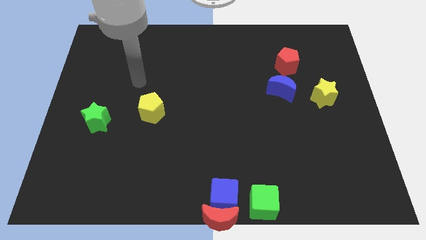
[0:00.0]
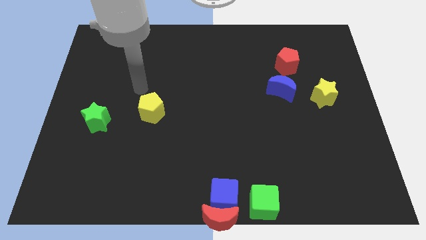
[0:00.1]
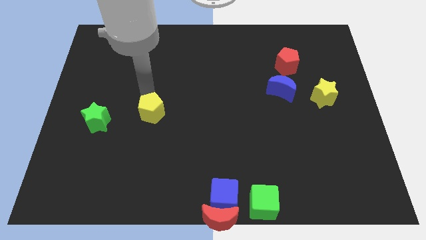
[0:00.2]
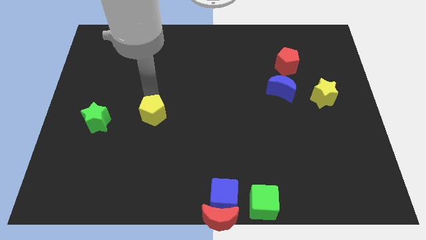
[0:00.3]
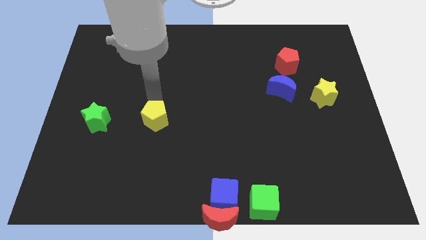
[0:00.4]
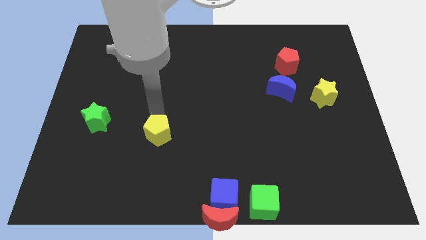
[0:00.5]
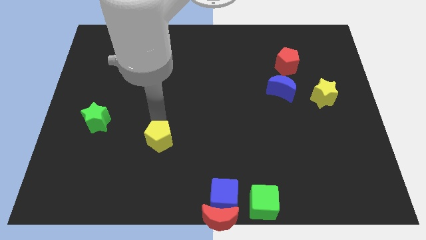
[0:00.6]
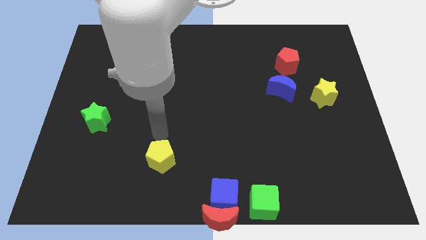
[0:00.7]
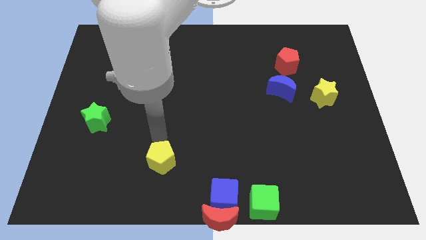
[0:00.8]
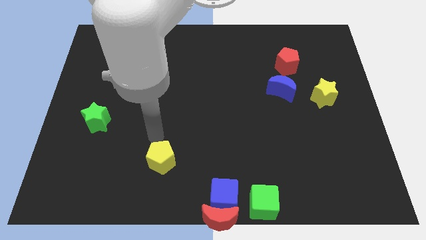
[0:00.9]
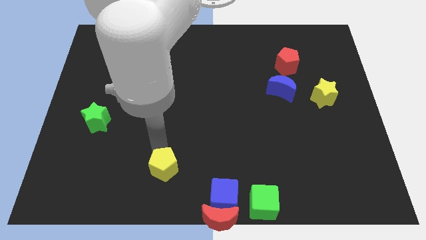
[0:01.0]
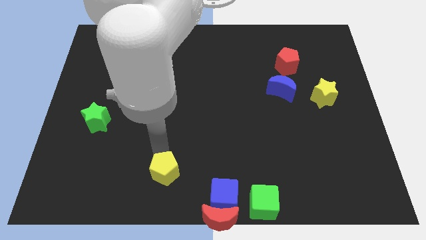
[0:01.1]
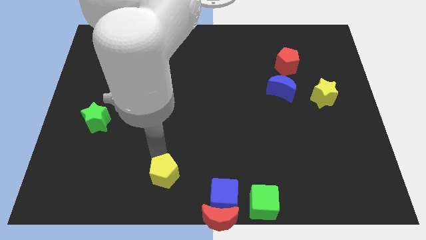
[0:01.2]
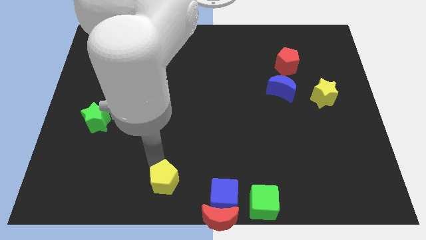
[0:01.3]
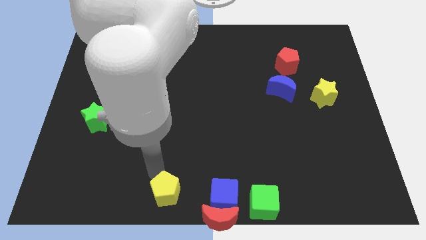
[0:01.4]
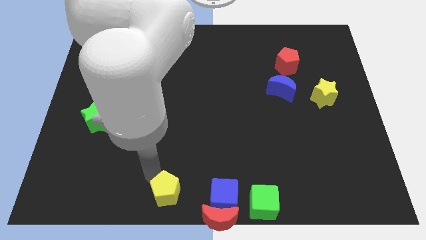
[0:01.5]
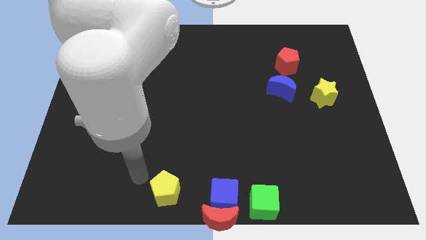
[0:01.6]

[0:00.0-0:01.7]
push the yellow pentagon left to the blue cube

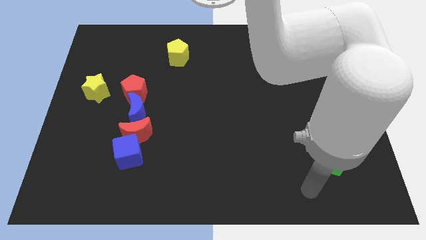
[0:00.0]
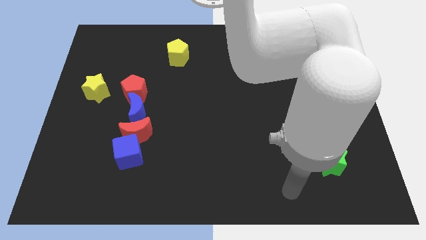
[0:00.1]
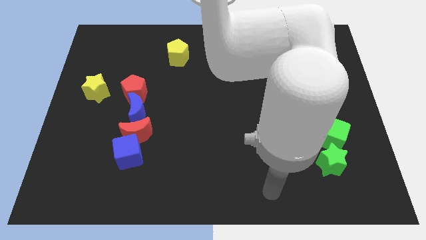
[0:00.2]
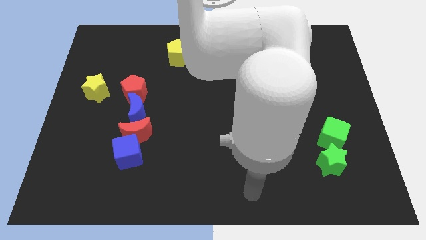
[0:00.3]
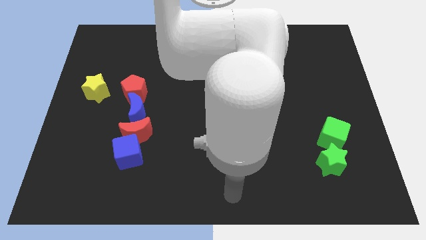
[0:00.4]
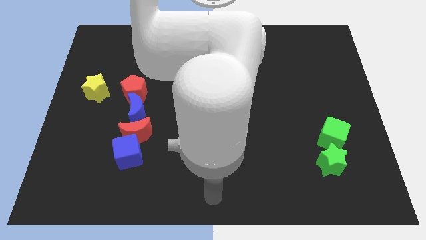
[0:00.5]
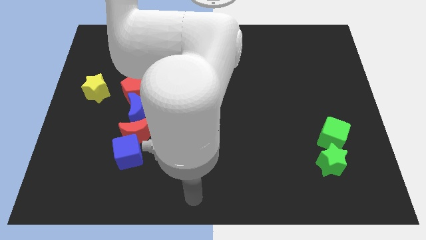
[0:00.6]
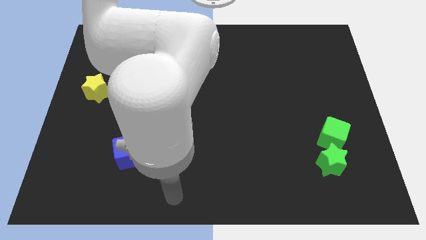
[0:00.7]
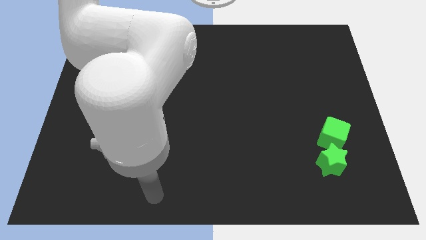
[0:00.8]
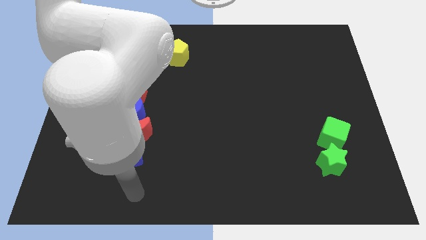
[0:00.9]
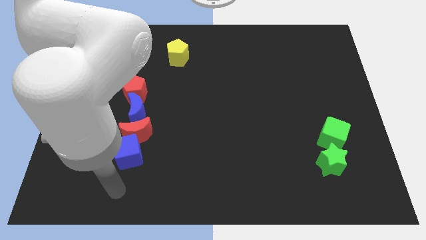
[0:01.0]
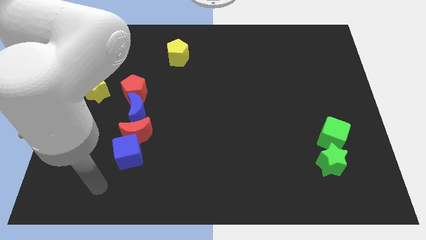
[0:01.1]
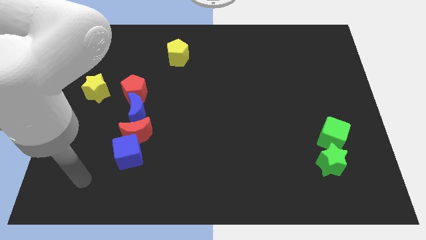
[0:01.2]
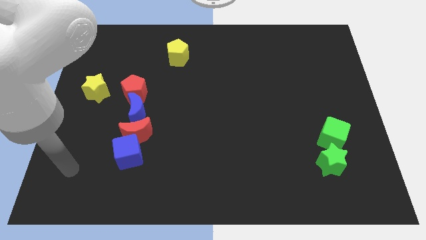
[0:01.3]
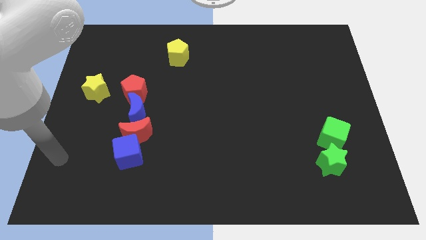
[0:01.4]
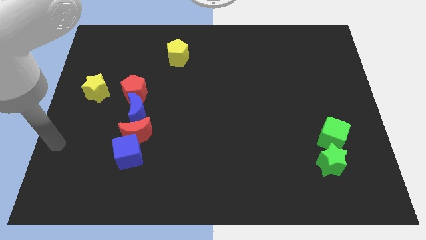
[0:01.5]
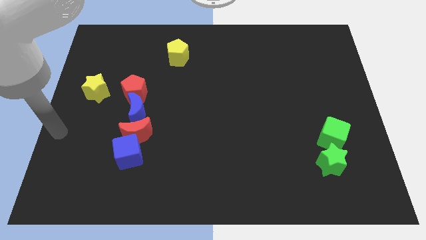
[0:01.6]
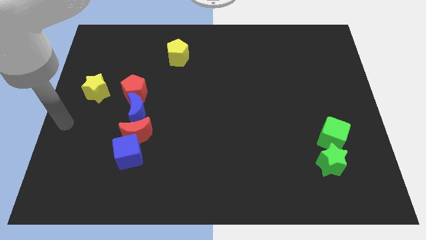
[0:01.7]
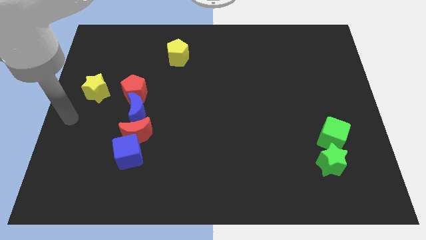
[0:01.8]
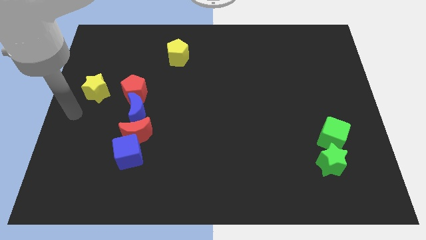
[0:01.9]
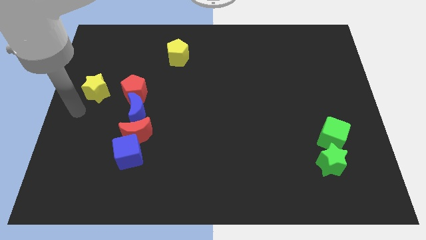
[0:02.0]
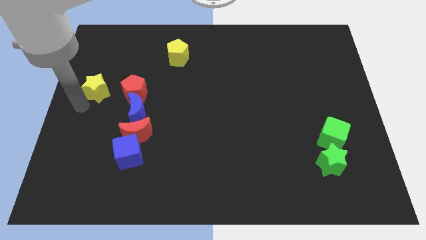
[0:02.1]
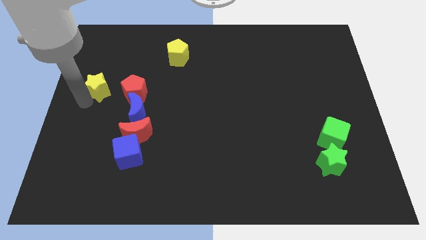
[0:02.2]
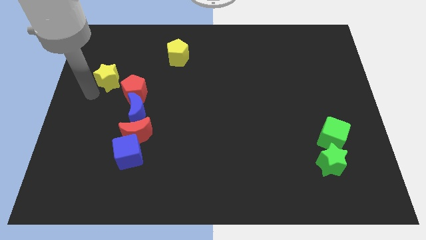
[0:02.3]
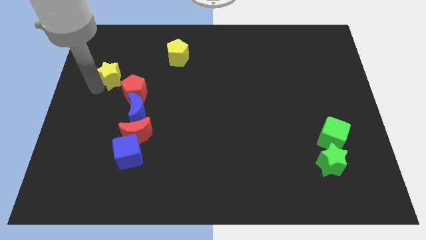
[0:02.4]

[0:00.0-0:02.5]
move your arm towards the yellow star

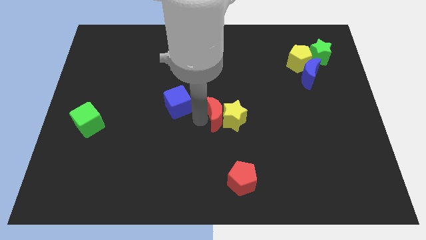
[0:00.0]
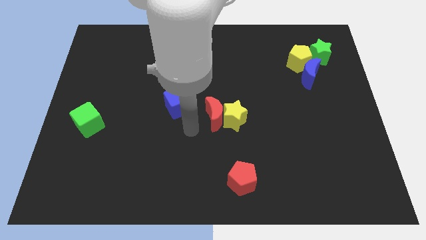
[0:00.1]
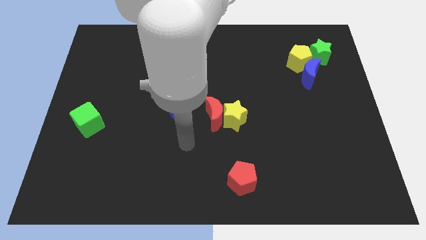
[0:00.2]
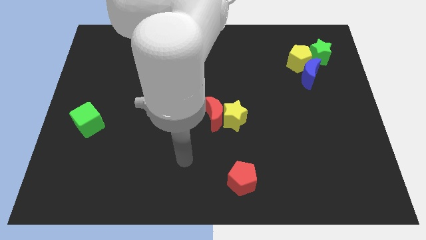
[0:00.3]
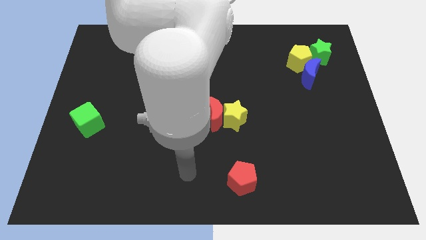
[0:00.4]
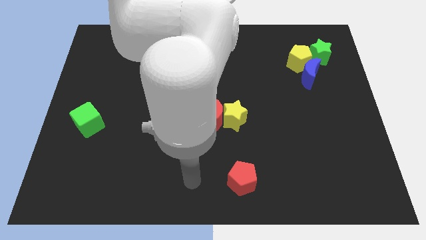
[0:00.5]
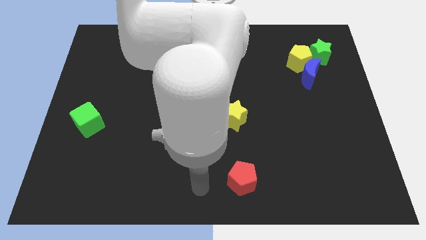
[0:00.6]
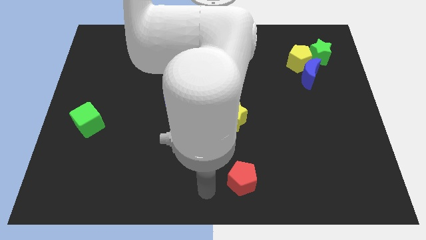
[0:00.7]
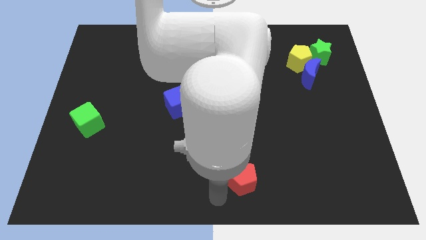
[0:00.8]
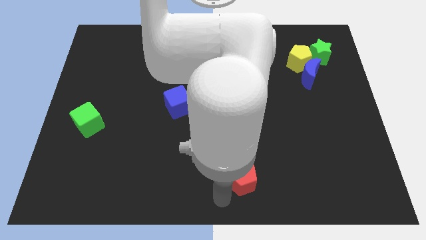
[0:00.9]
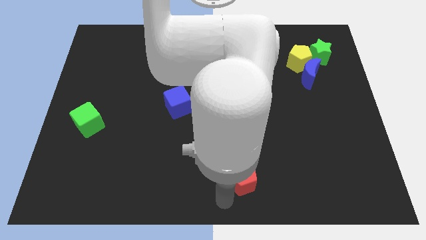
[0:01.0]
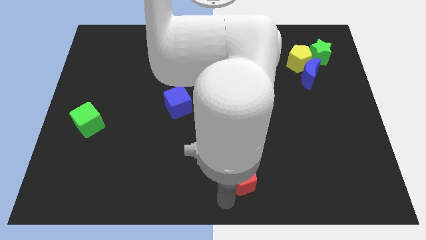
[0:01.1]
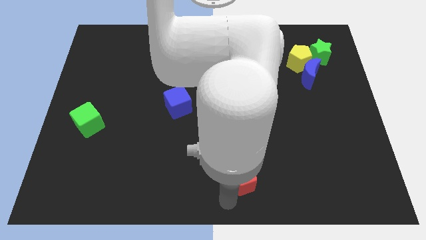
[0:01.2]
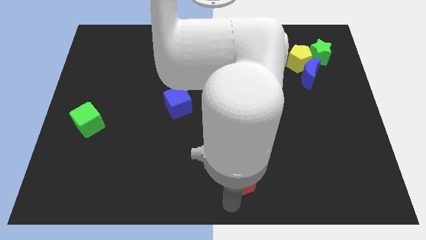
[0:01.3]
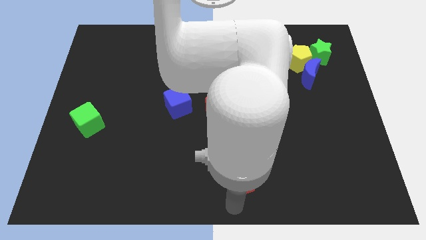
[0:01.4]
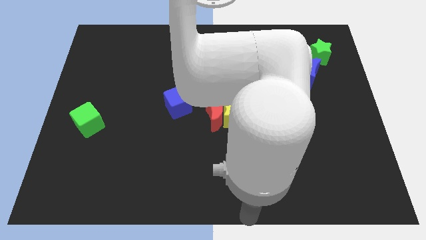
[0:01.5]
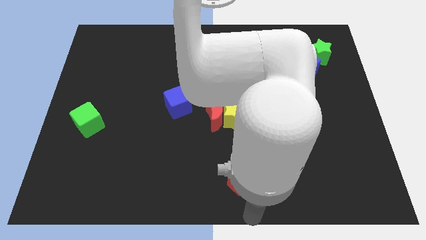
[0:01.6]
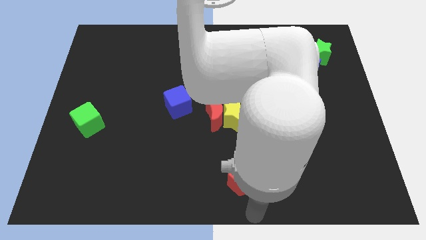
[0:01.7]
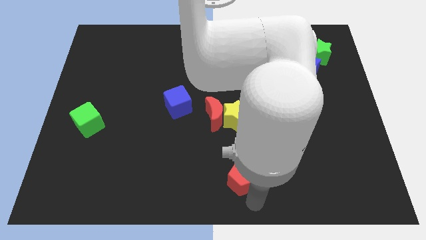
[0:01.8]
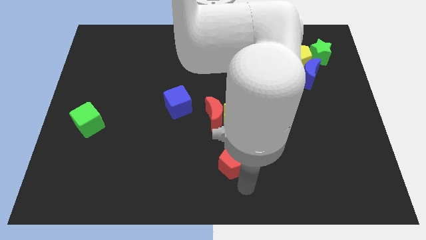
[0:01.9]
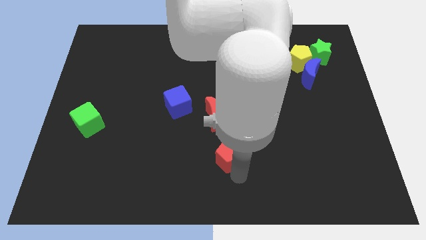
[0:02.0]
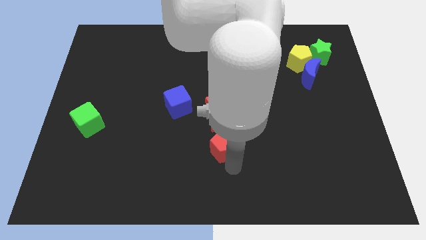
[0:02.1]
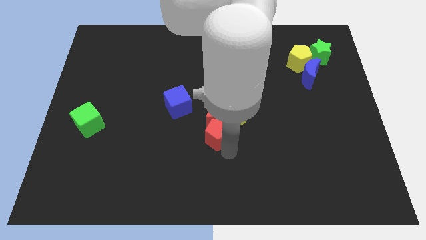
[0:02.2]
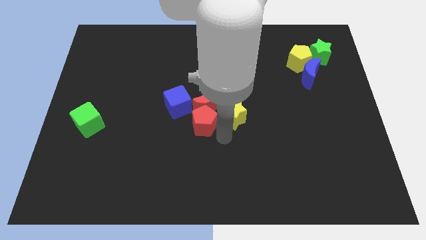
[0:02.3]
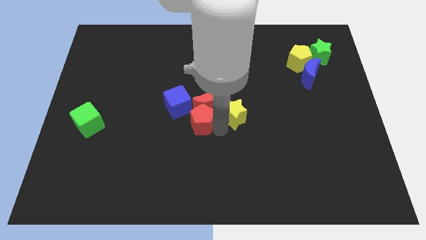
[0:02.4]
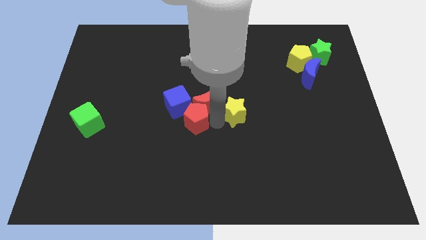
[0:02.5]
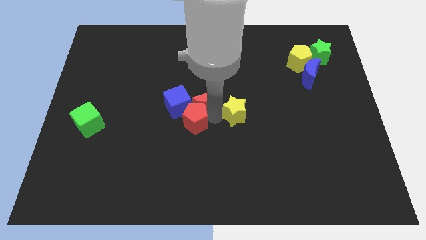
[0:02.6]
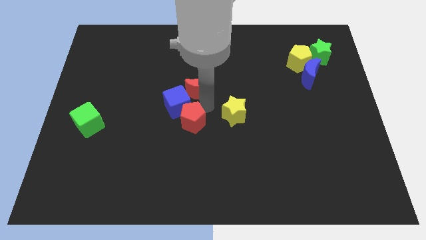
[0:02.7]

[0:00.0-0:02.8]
move the red pentagon into the bottom side of the red crescent

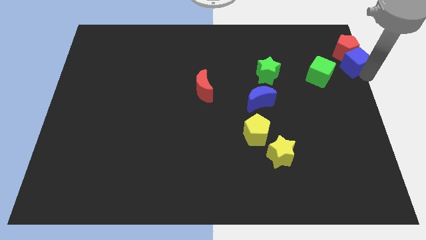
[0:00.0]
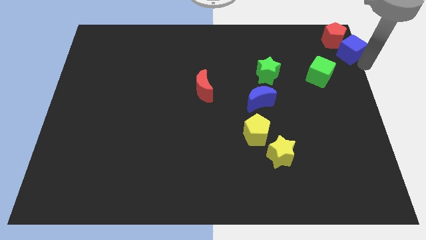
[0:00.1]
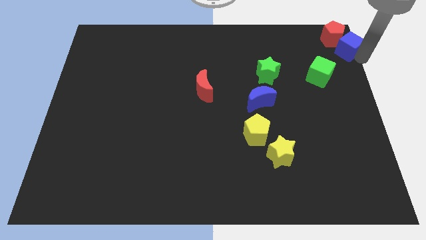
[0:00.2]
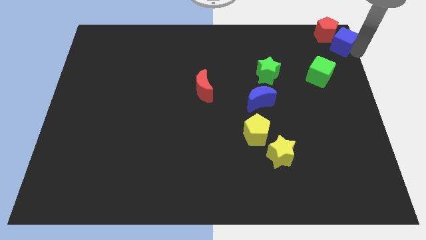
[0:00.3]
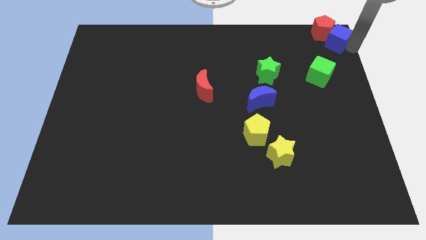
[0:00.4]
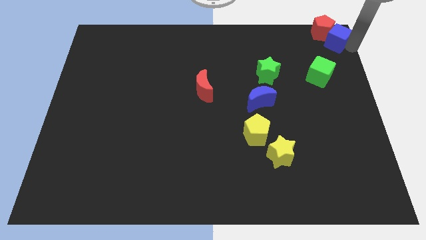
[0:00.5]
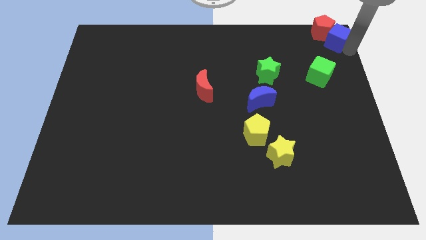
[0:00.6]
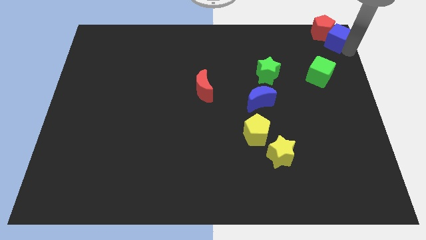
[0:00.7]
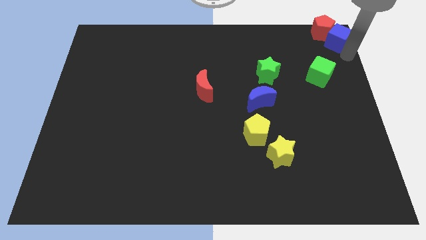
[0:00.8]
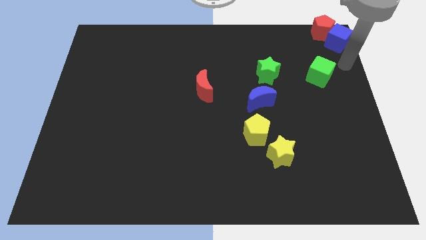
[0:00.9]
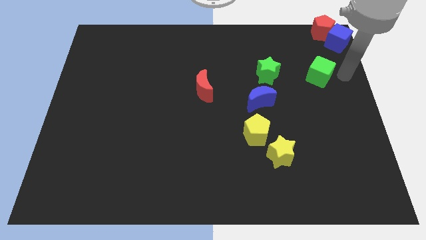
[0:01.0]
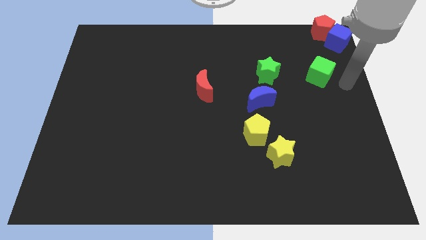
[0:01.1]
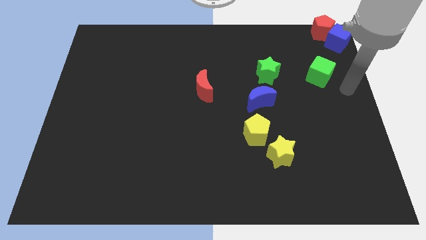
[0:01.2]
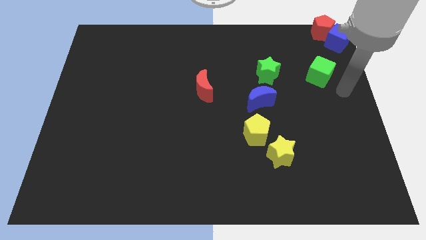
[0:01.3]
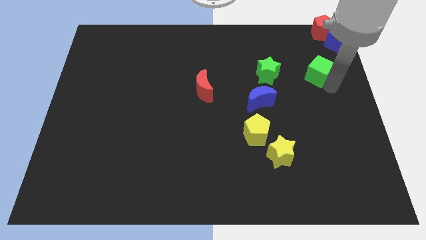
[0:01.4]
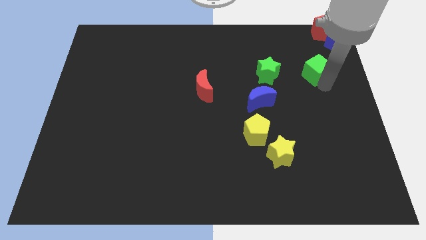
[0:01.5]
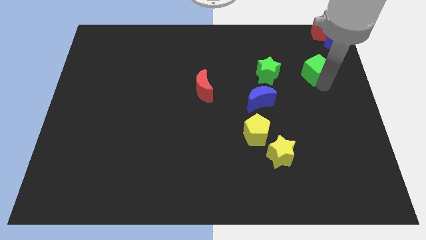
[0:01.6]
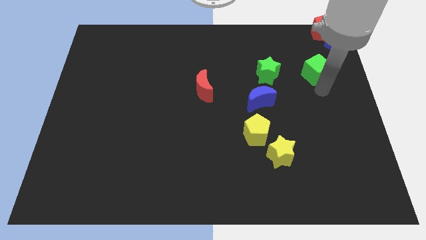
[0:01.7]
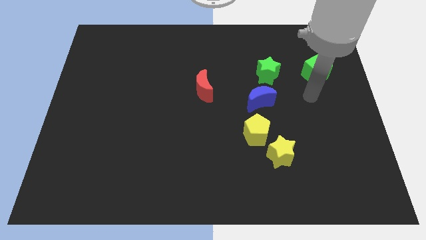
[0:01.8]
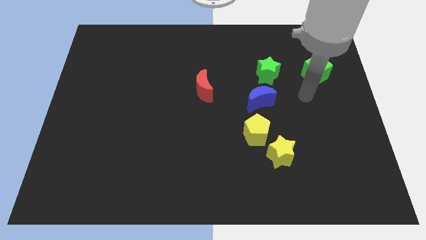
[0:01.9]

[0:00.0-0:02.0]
move your arm away from the blue cube
